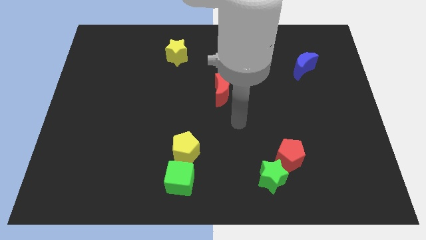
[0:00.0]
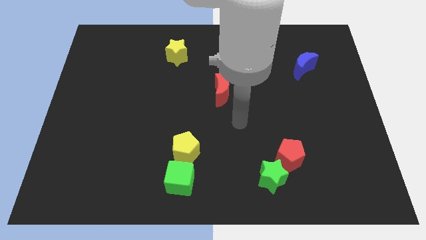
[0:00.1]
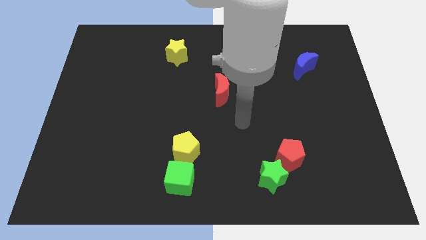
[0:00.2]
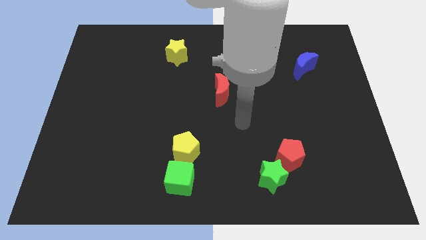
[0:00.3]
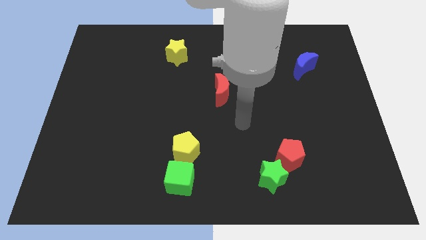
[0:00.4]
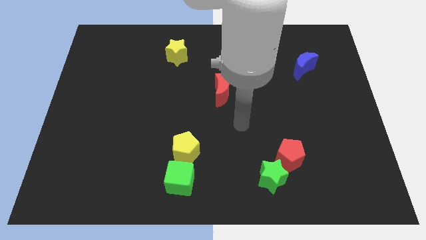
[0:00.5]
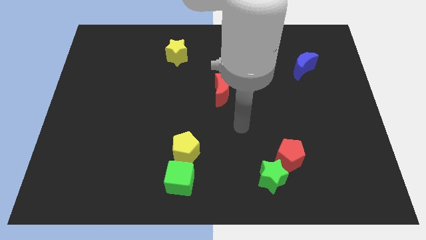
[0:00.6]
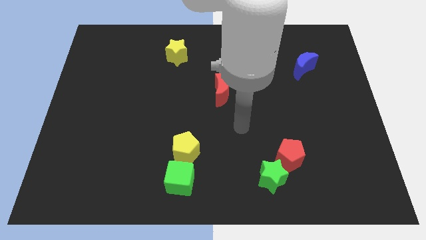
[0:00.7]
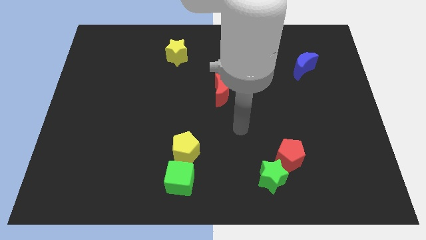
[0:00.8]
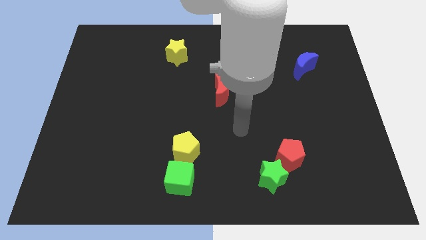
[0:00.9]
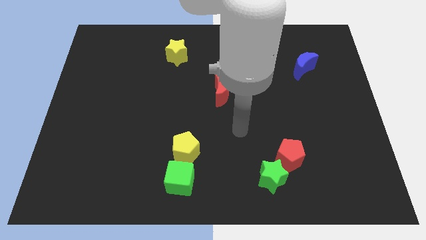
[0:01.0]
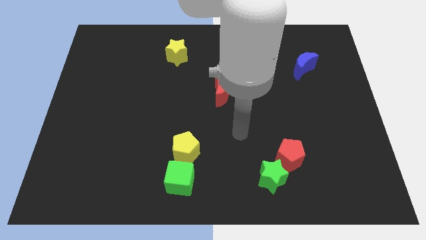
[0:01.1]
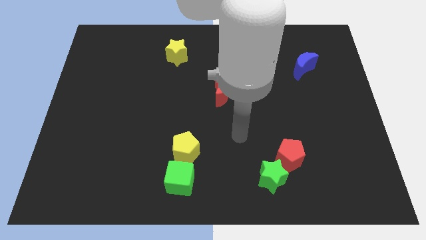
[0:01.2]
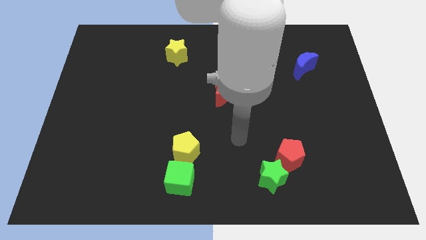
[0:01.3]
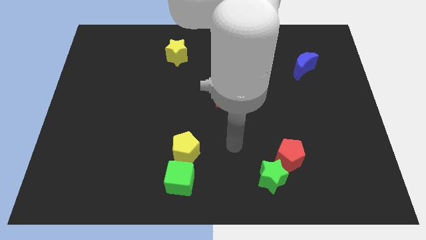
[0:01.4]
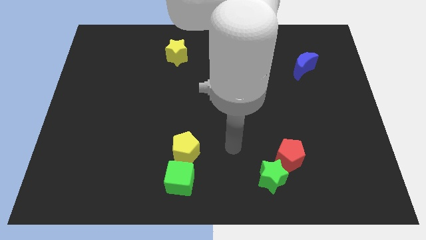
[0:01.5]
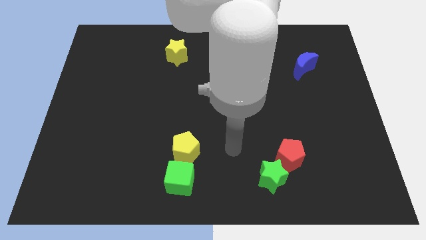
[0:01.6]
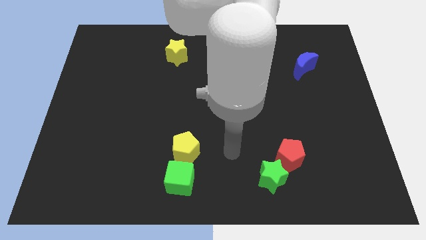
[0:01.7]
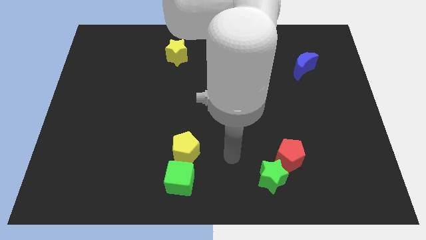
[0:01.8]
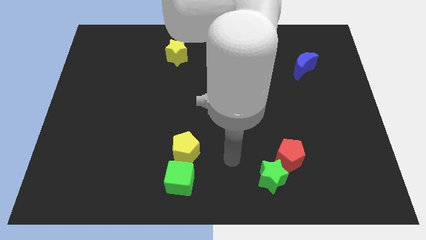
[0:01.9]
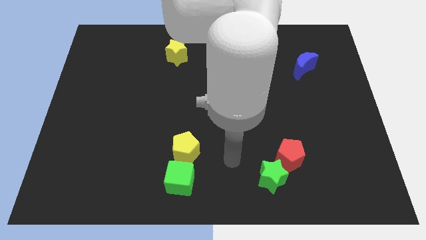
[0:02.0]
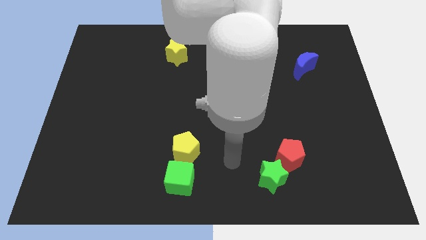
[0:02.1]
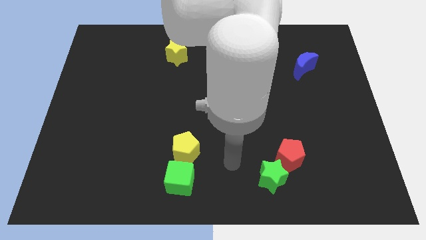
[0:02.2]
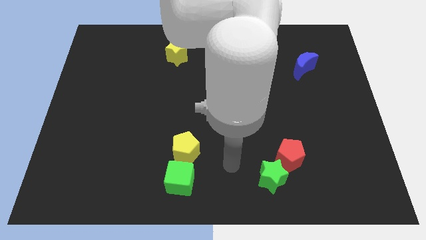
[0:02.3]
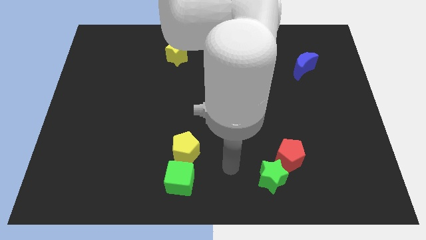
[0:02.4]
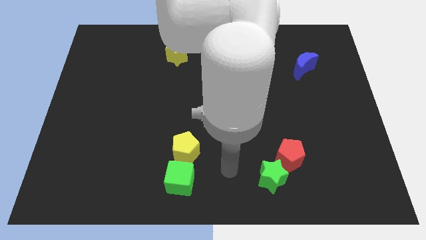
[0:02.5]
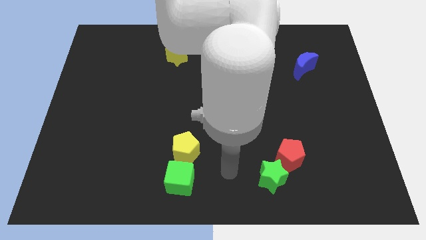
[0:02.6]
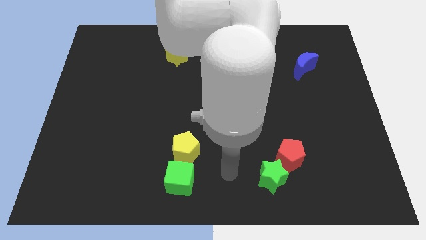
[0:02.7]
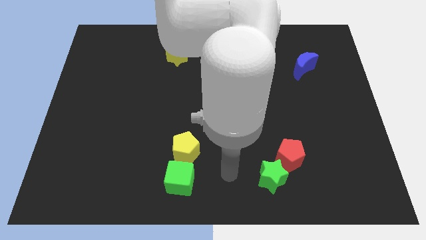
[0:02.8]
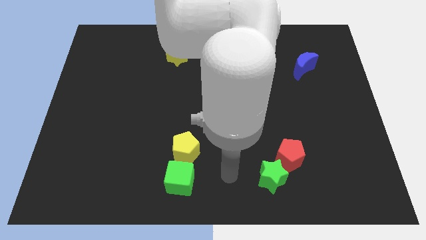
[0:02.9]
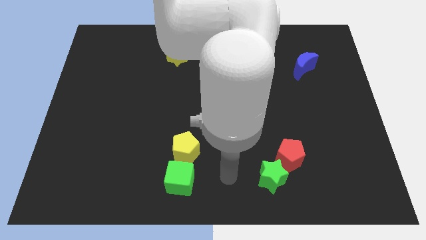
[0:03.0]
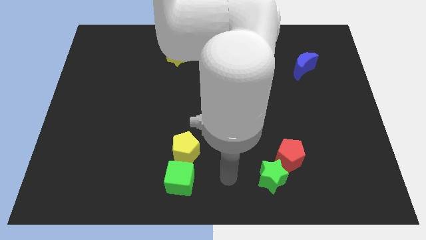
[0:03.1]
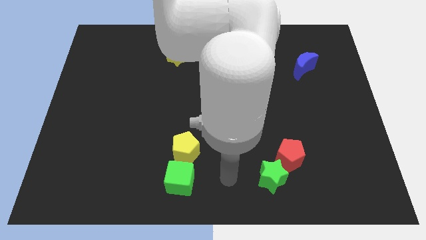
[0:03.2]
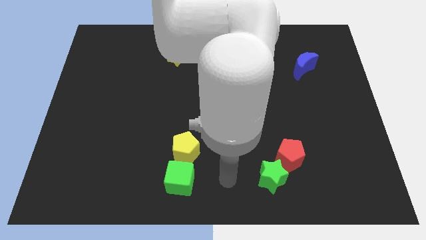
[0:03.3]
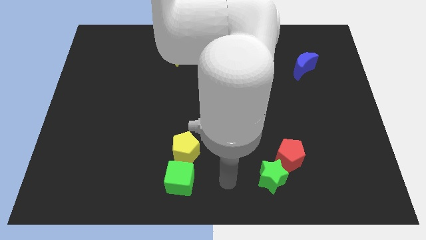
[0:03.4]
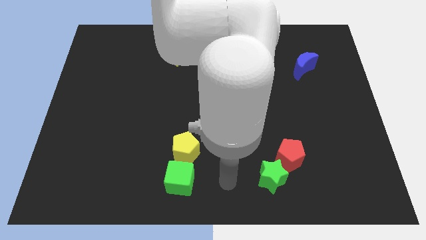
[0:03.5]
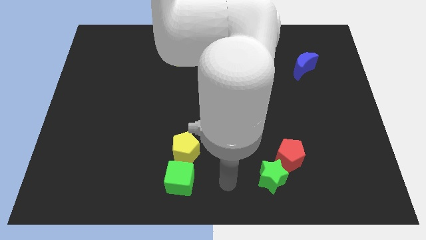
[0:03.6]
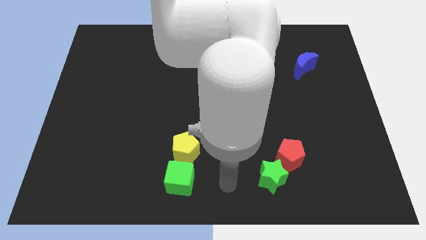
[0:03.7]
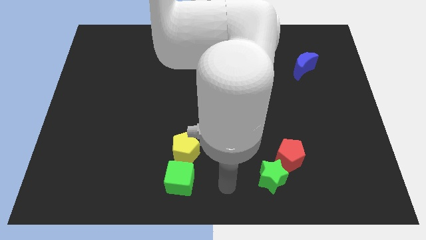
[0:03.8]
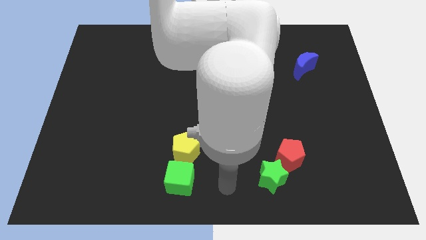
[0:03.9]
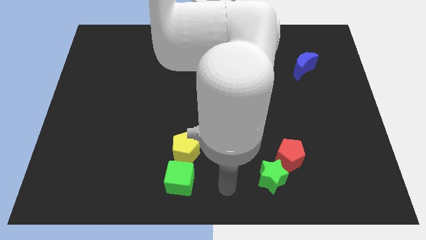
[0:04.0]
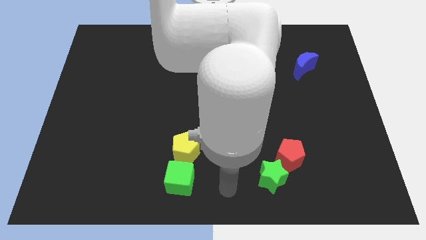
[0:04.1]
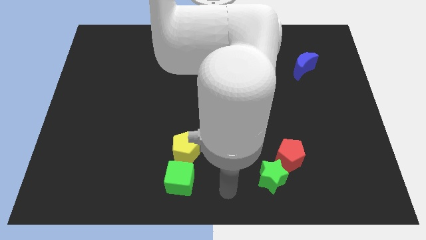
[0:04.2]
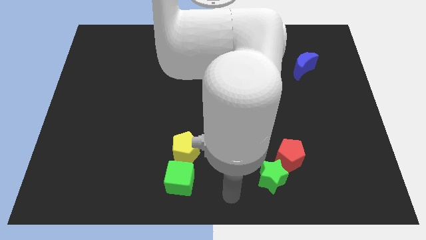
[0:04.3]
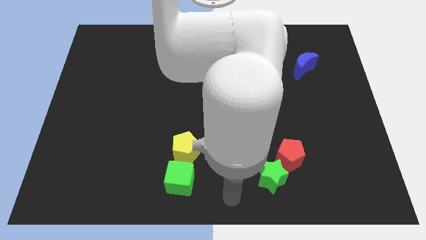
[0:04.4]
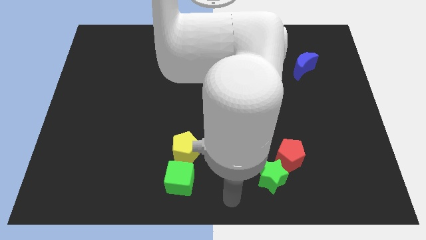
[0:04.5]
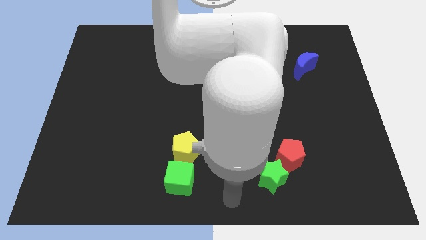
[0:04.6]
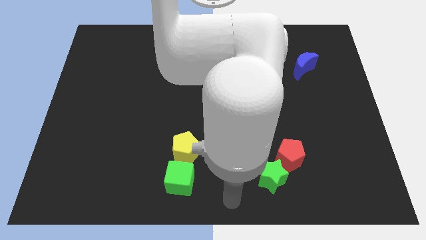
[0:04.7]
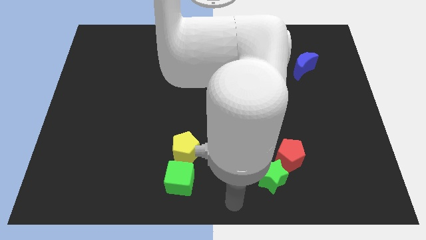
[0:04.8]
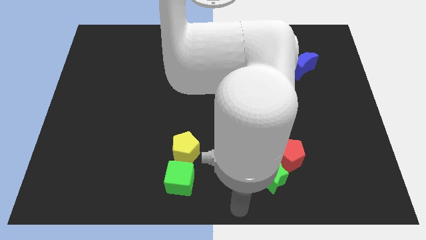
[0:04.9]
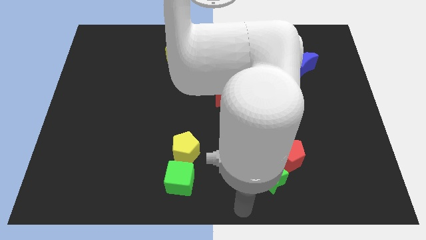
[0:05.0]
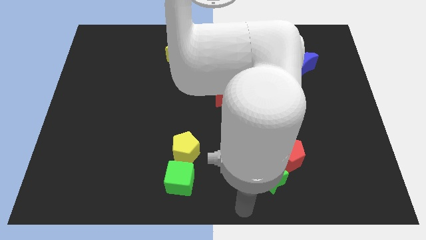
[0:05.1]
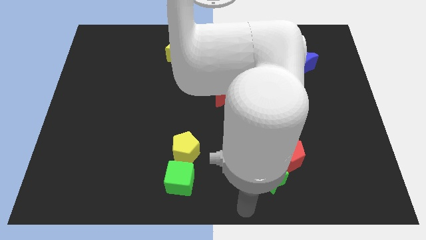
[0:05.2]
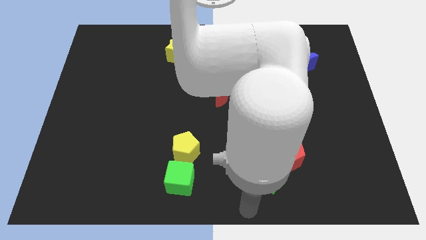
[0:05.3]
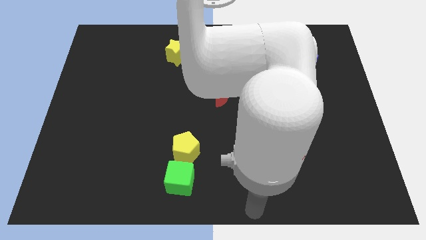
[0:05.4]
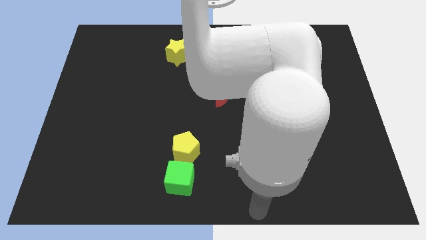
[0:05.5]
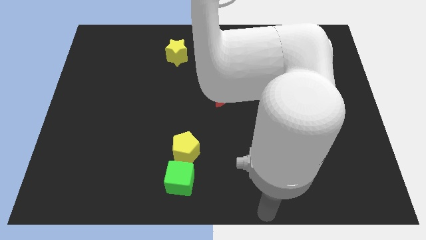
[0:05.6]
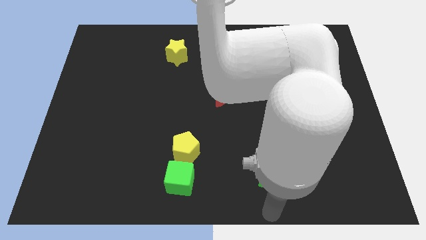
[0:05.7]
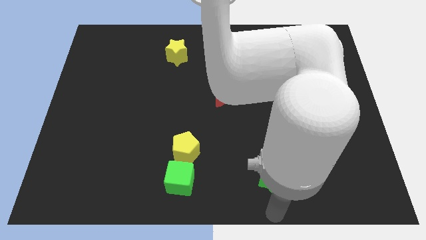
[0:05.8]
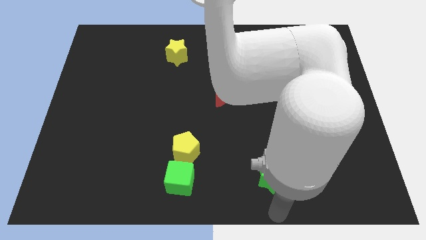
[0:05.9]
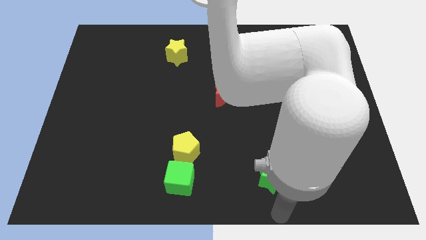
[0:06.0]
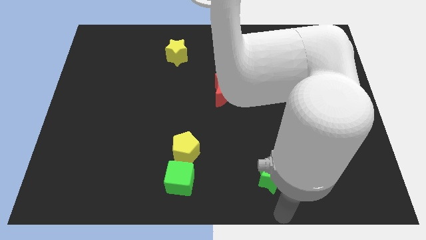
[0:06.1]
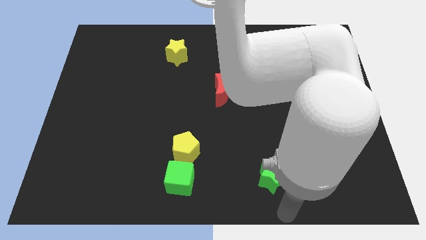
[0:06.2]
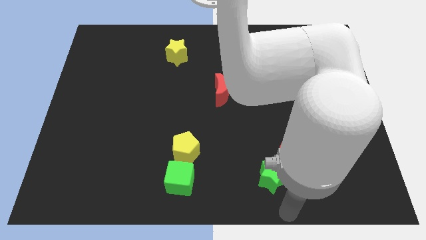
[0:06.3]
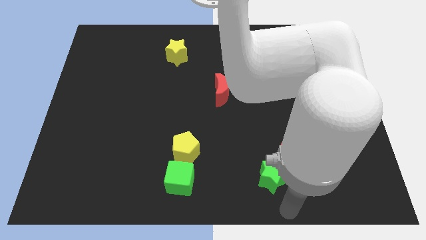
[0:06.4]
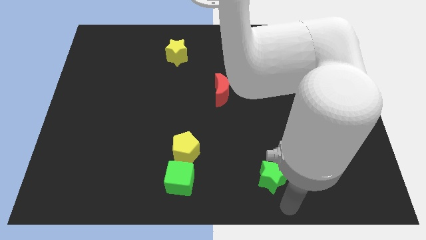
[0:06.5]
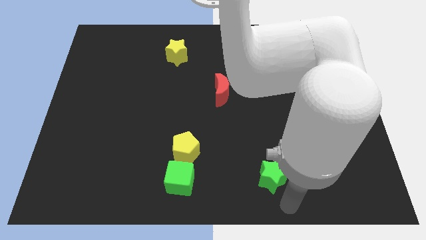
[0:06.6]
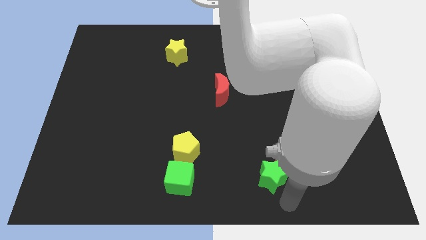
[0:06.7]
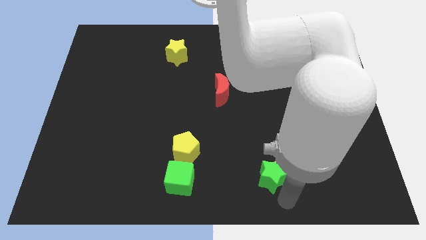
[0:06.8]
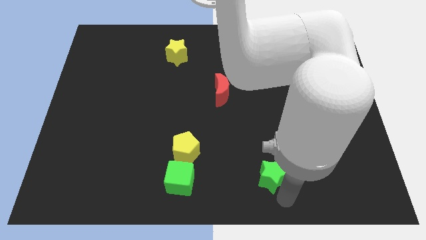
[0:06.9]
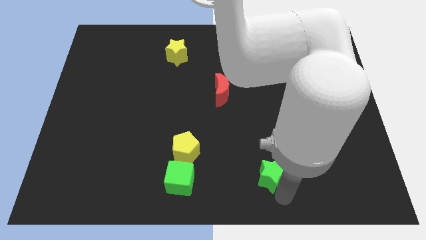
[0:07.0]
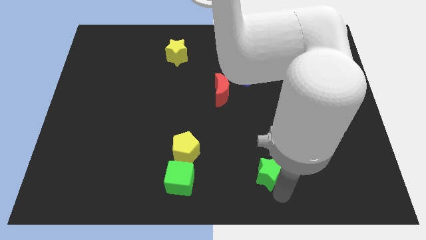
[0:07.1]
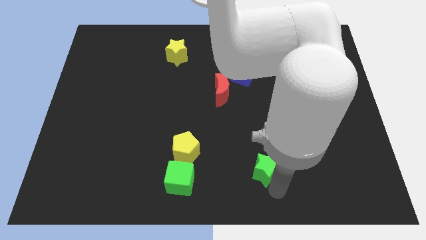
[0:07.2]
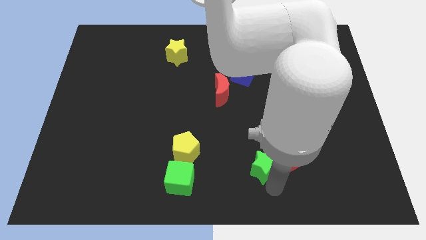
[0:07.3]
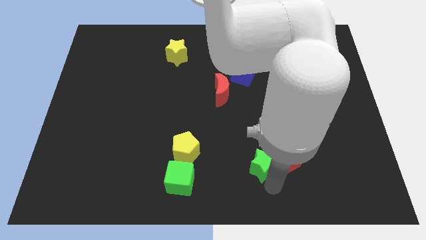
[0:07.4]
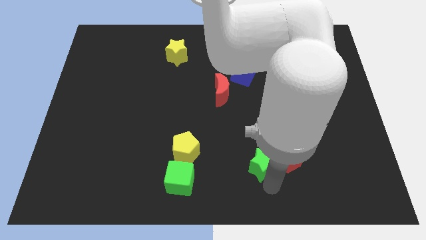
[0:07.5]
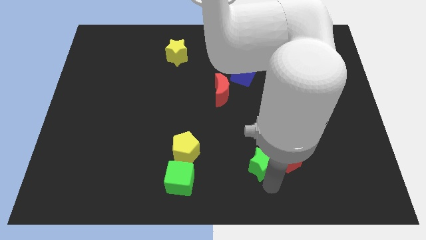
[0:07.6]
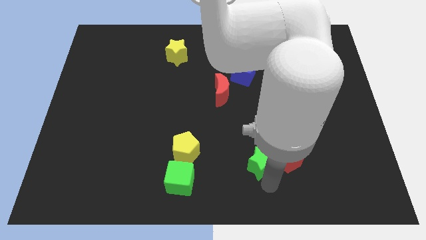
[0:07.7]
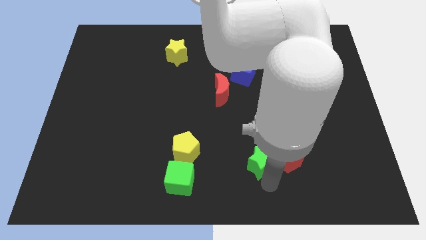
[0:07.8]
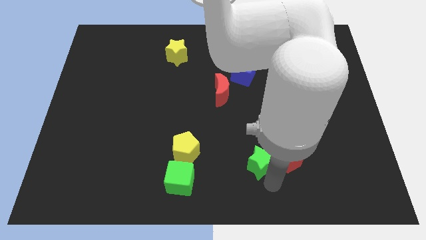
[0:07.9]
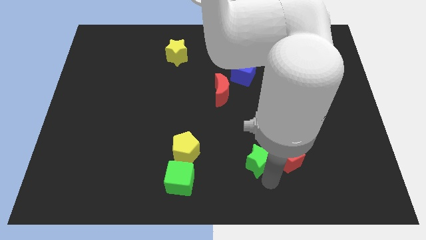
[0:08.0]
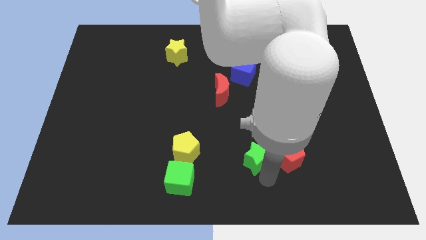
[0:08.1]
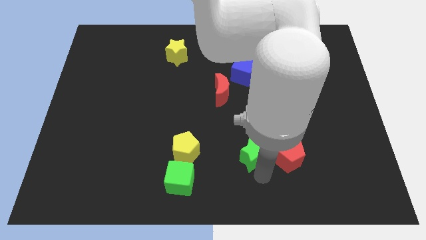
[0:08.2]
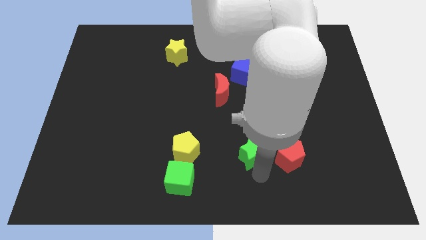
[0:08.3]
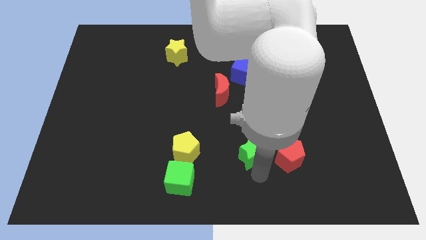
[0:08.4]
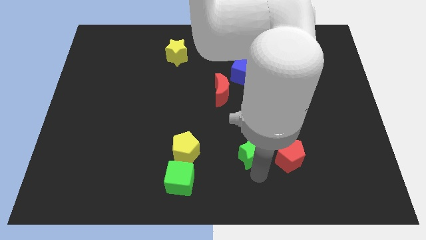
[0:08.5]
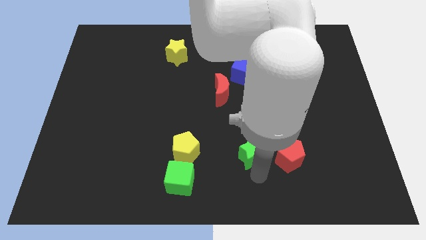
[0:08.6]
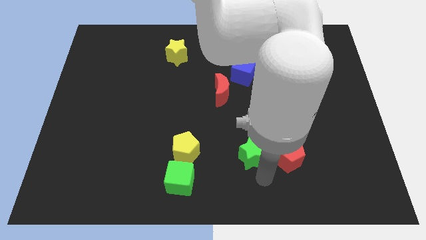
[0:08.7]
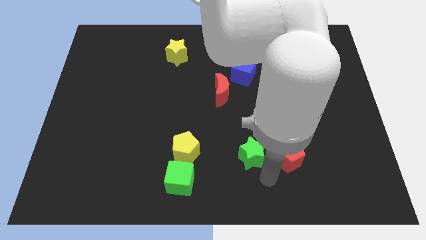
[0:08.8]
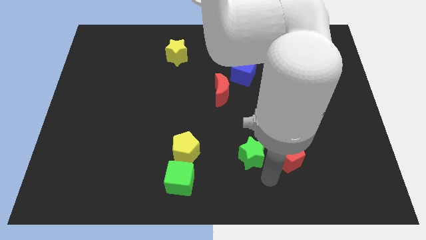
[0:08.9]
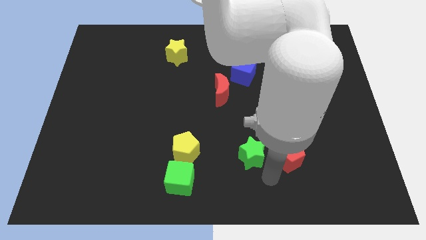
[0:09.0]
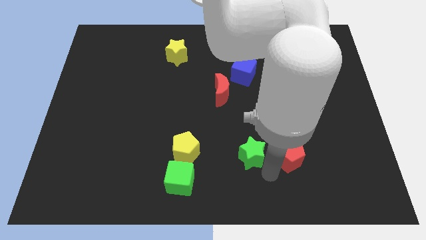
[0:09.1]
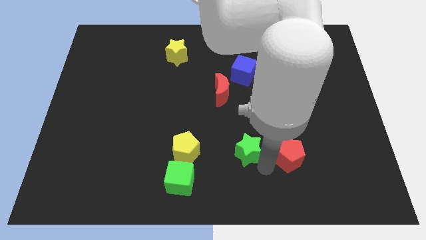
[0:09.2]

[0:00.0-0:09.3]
push the green star to the left of the red pentagon
